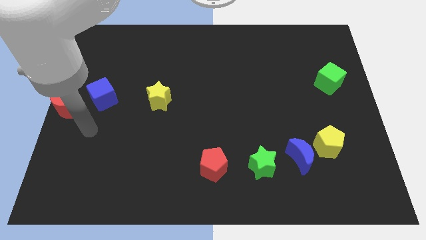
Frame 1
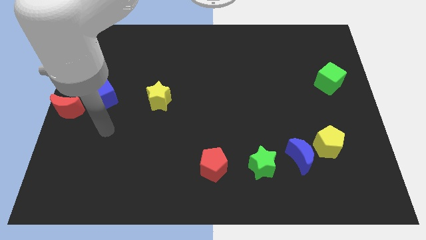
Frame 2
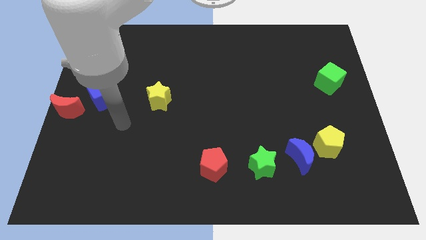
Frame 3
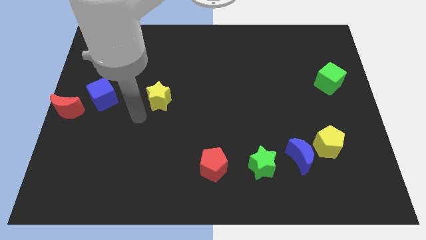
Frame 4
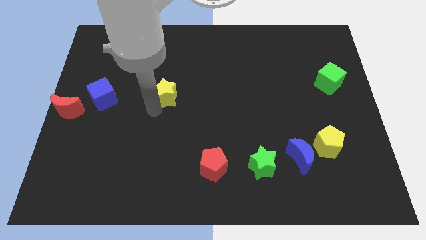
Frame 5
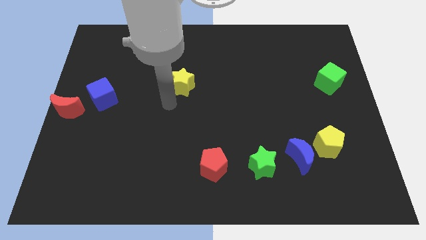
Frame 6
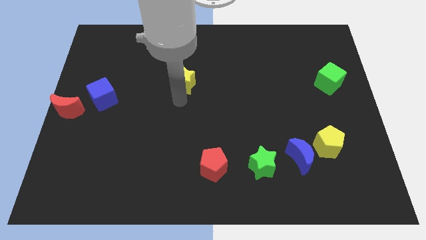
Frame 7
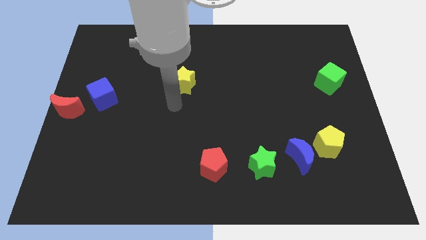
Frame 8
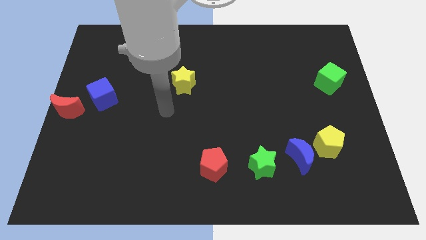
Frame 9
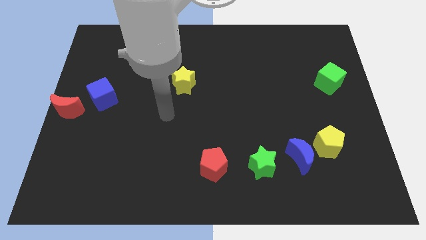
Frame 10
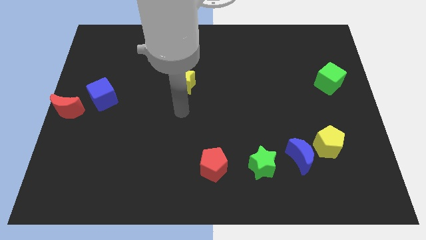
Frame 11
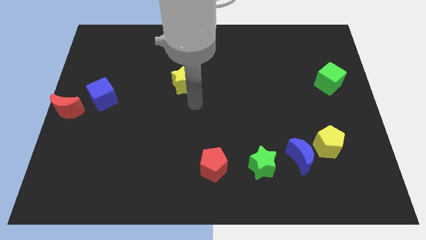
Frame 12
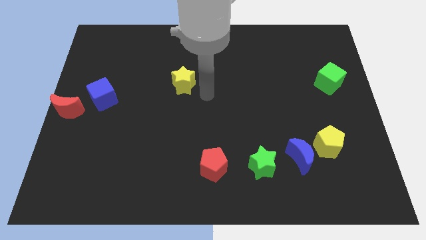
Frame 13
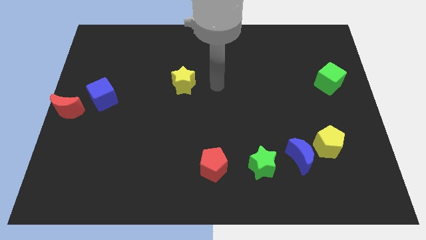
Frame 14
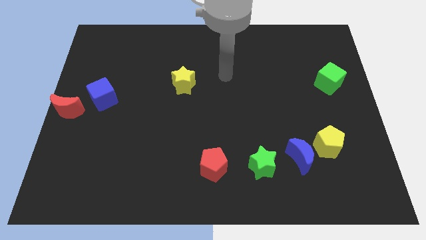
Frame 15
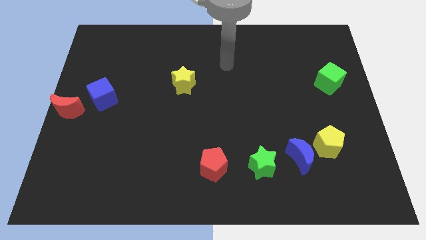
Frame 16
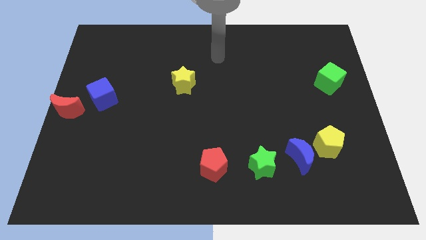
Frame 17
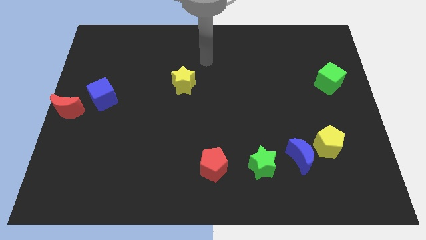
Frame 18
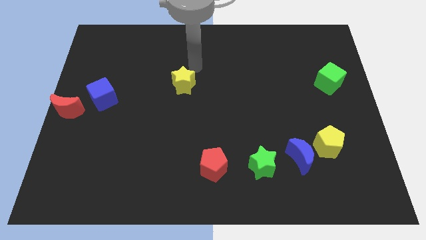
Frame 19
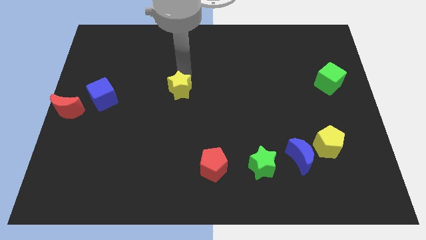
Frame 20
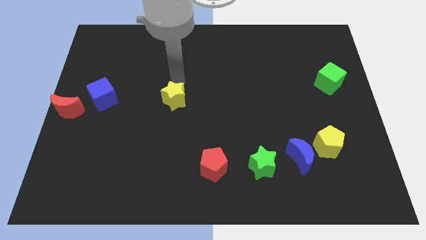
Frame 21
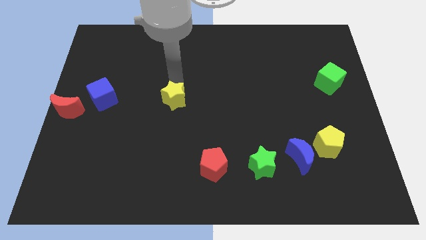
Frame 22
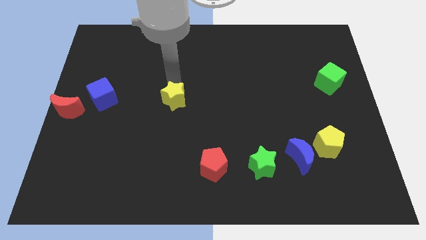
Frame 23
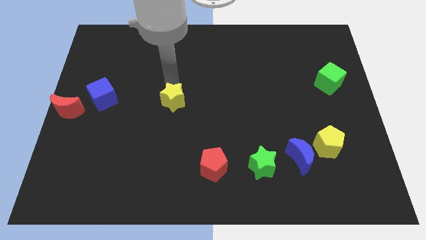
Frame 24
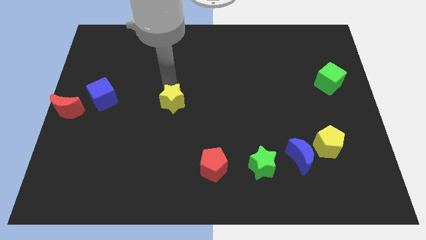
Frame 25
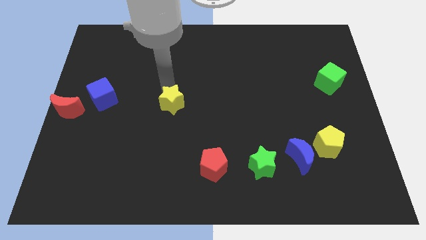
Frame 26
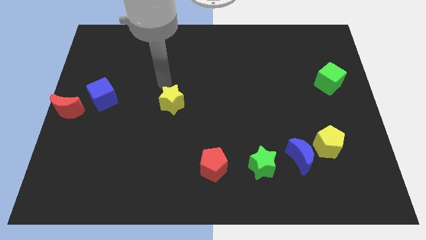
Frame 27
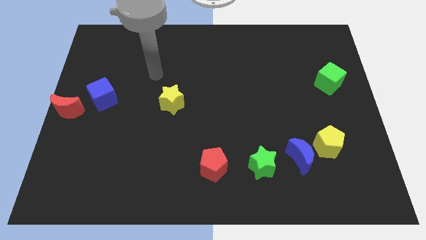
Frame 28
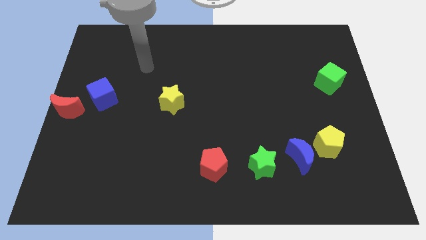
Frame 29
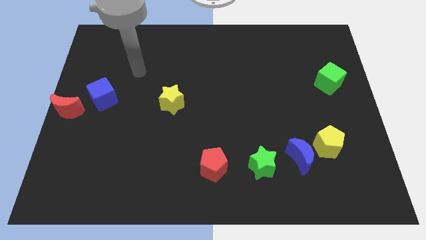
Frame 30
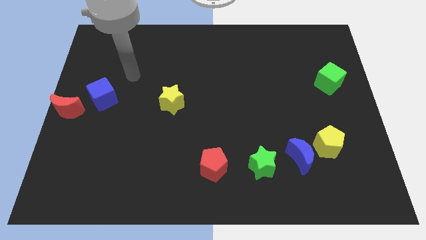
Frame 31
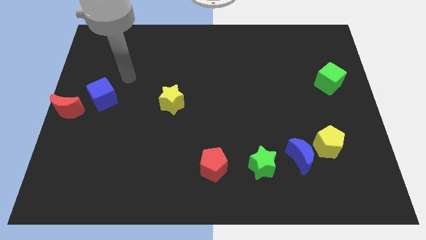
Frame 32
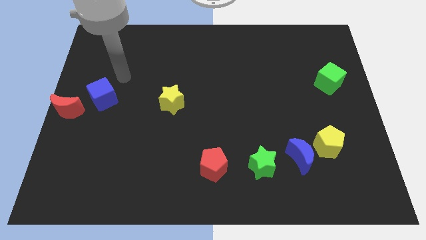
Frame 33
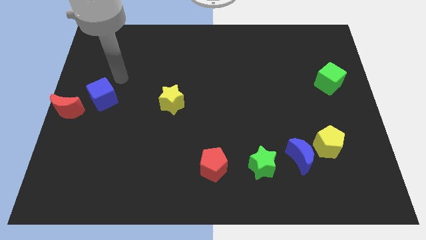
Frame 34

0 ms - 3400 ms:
push the yellow star towards the center

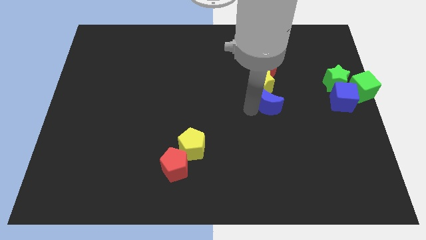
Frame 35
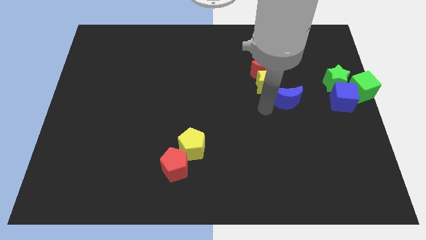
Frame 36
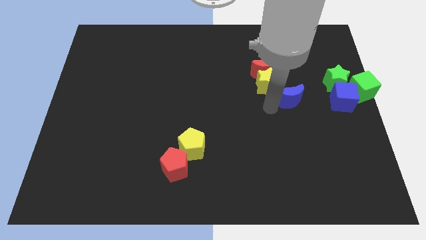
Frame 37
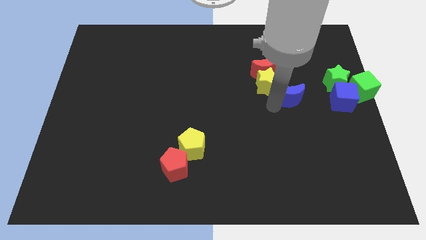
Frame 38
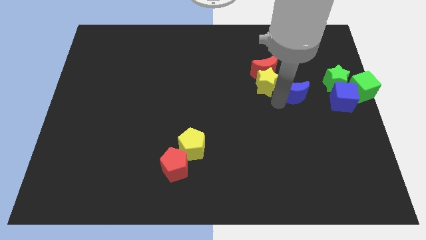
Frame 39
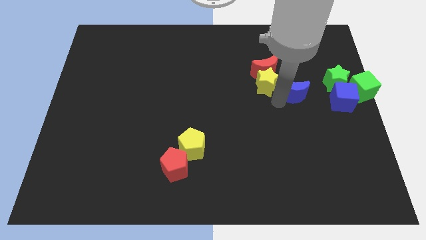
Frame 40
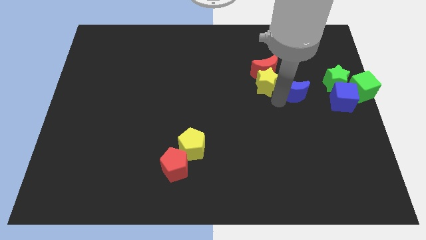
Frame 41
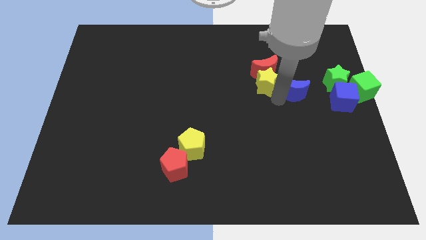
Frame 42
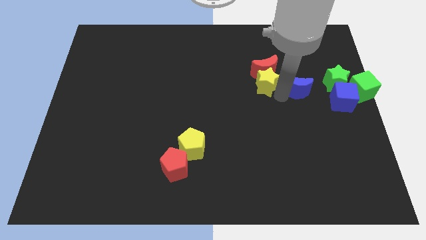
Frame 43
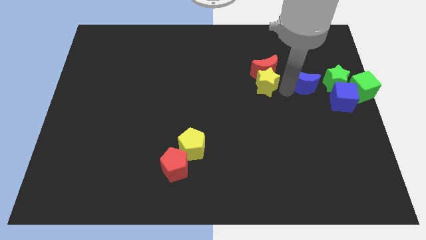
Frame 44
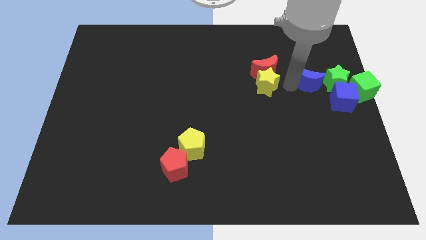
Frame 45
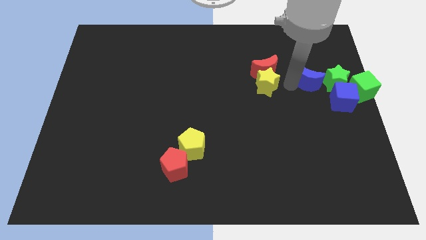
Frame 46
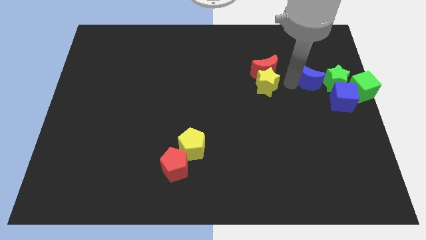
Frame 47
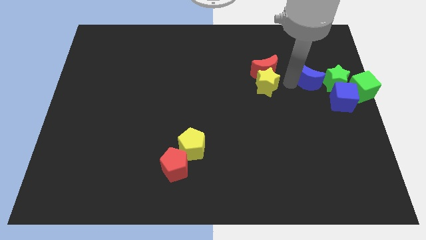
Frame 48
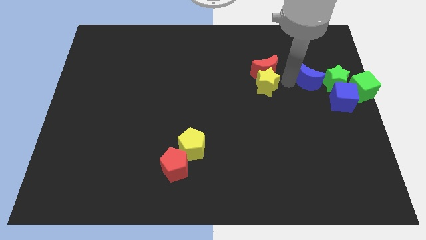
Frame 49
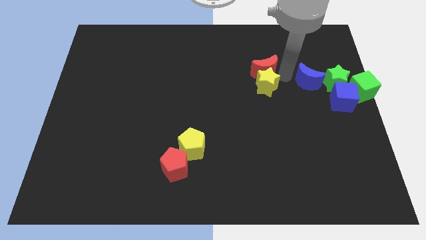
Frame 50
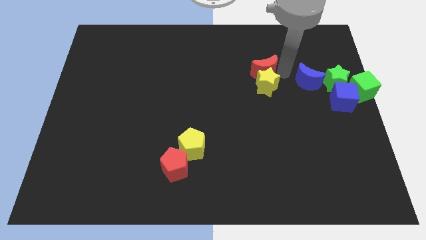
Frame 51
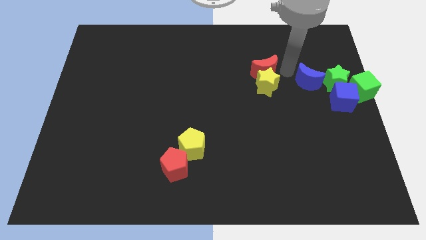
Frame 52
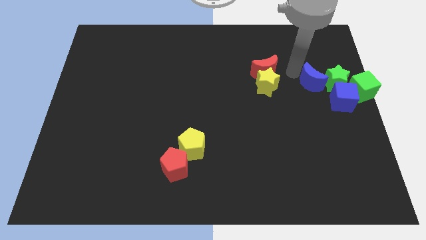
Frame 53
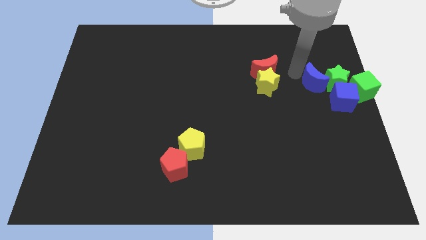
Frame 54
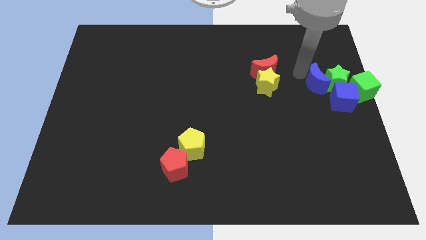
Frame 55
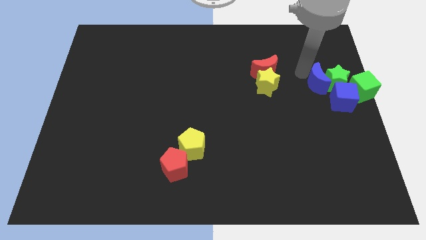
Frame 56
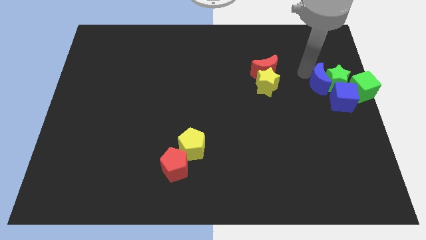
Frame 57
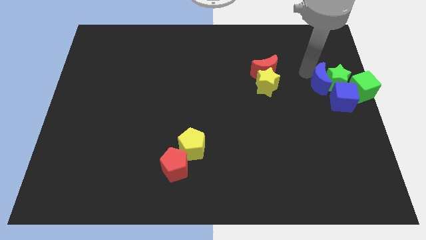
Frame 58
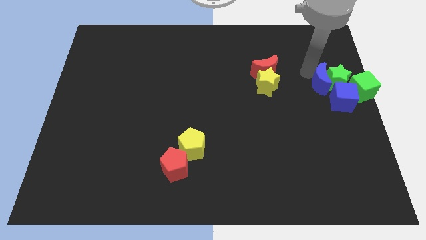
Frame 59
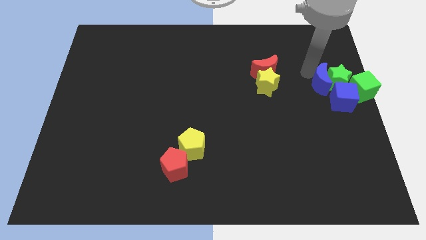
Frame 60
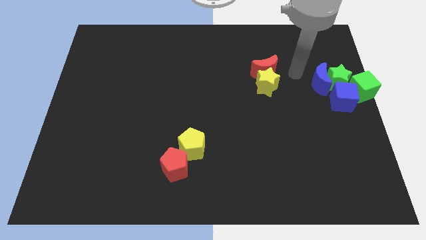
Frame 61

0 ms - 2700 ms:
push the blue crescent into the left of green star

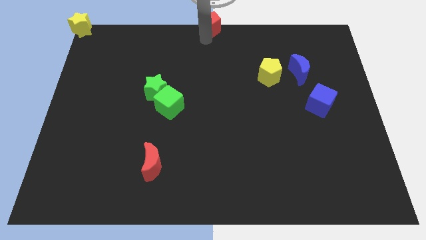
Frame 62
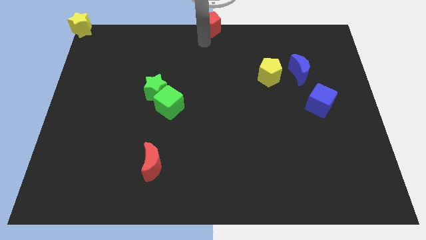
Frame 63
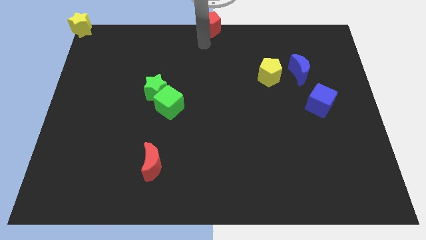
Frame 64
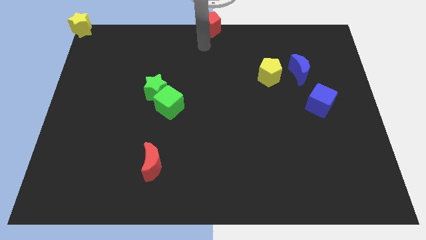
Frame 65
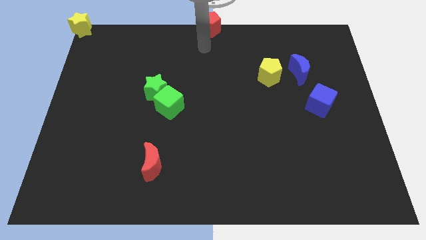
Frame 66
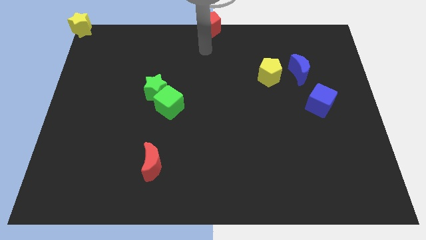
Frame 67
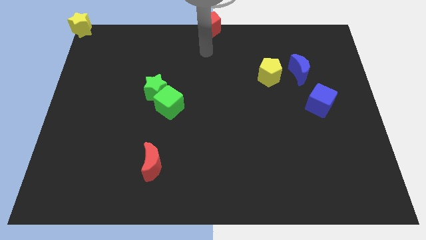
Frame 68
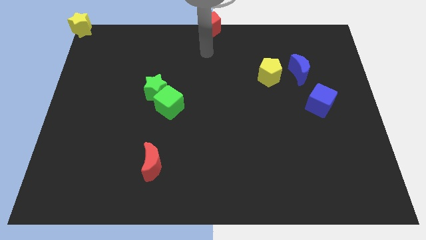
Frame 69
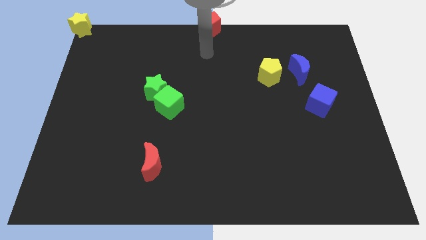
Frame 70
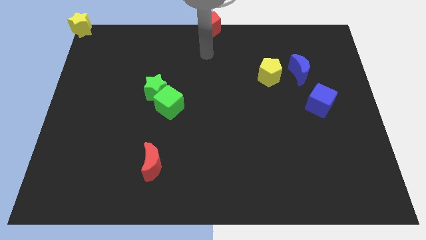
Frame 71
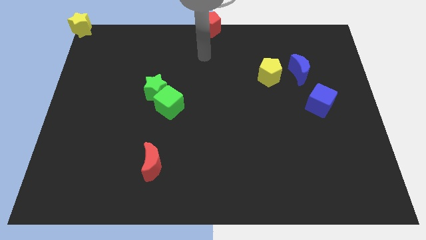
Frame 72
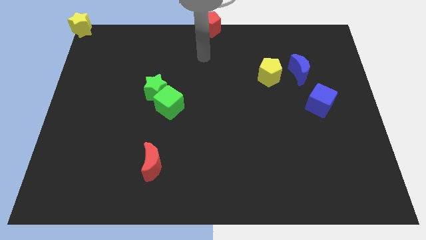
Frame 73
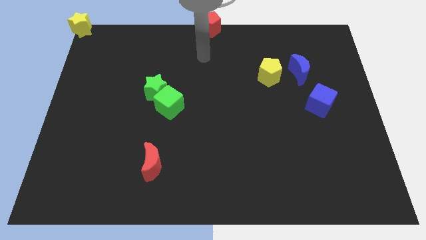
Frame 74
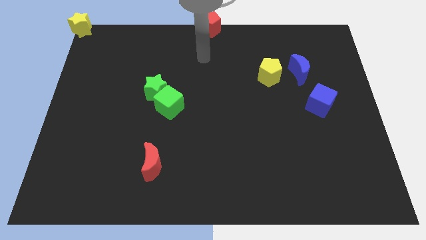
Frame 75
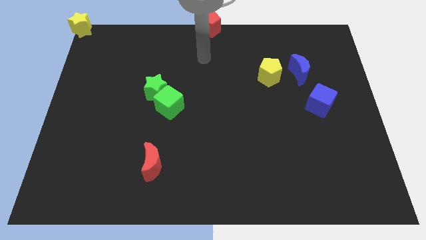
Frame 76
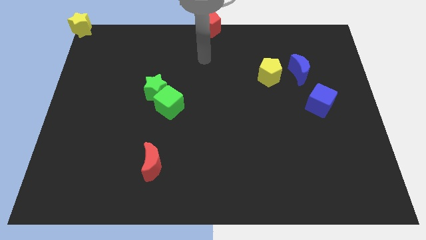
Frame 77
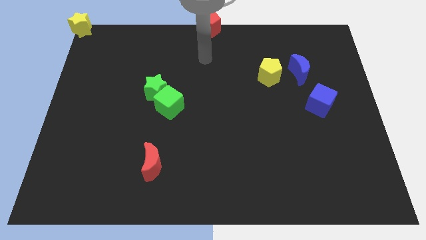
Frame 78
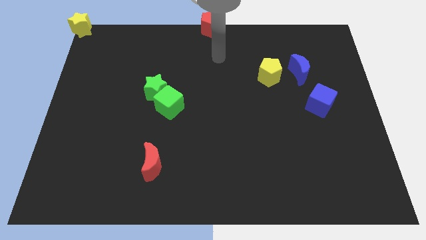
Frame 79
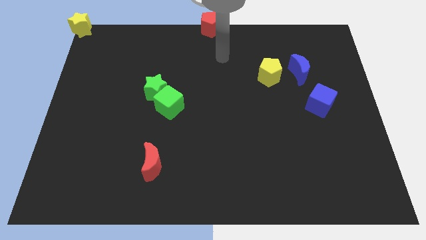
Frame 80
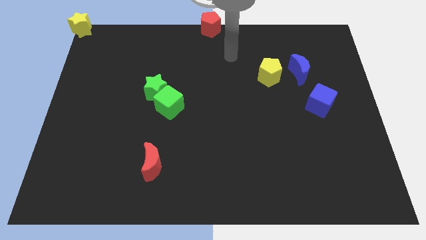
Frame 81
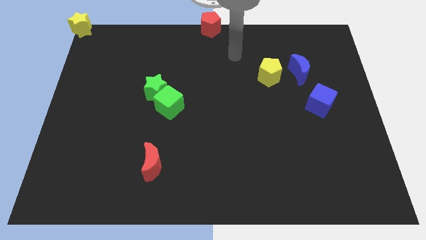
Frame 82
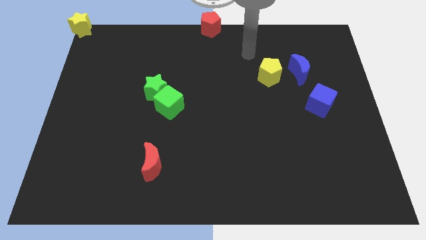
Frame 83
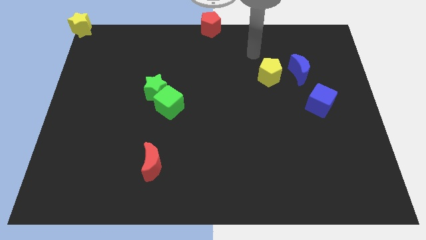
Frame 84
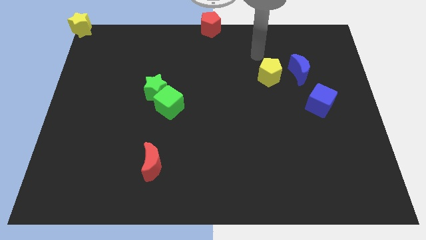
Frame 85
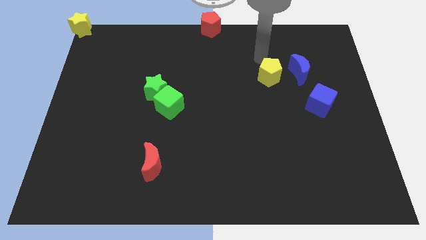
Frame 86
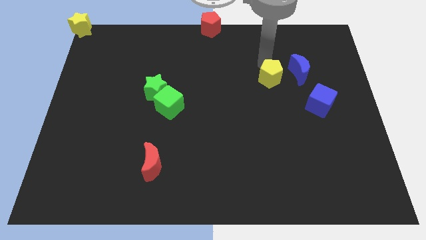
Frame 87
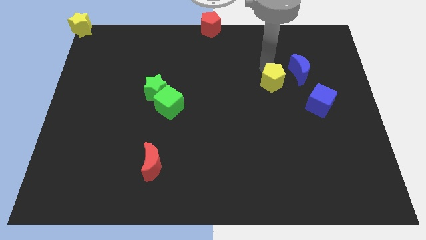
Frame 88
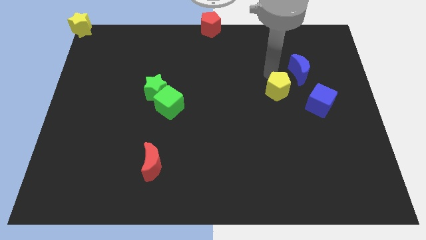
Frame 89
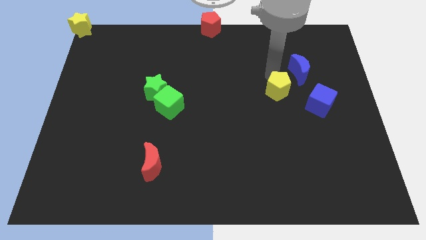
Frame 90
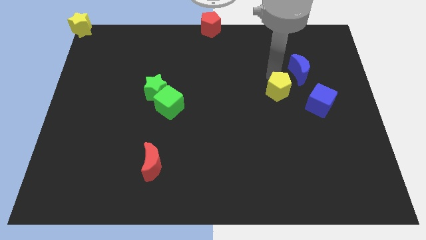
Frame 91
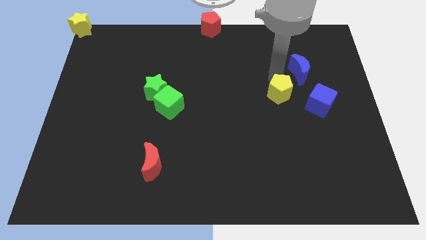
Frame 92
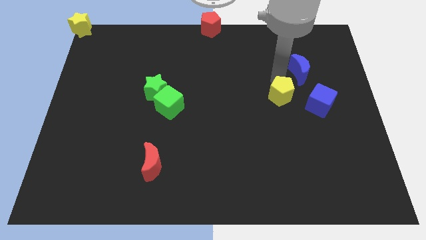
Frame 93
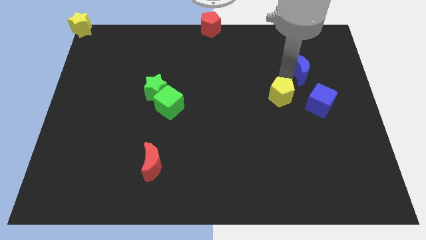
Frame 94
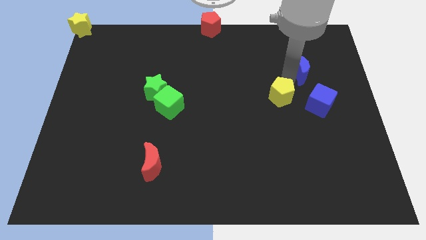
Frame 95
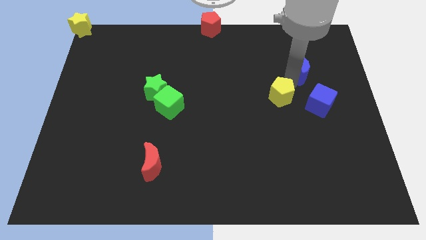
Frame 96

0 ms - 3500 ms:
move the yellow pentagon downwards slightly
